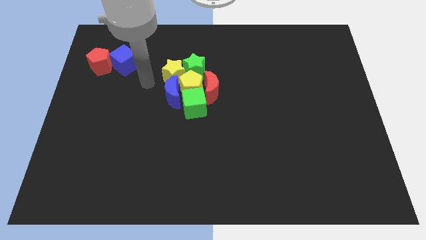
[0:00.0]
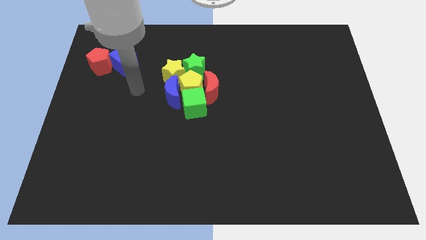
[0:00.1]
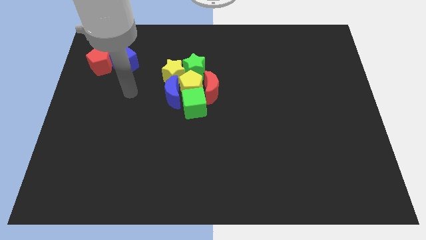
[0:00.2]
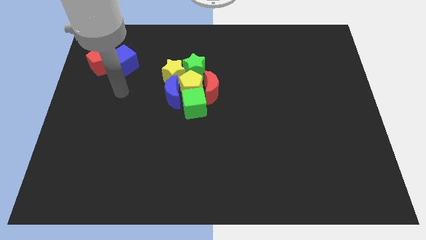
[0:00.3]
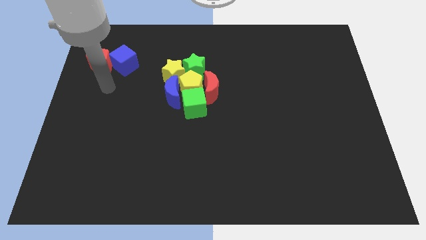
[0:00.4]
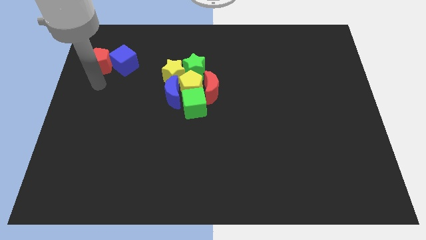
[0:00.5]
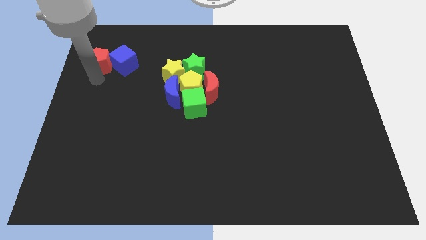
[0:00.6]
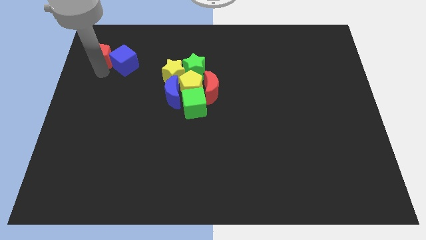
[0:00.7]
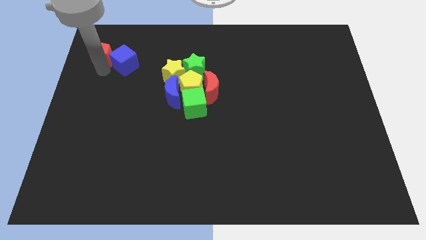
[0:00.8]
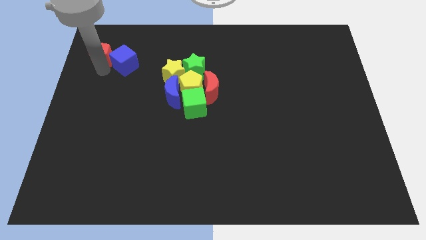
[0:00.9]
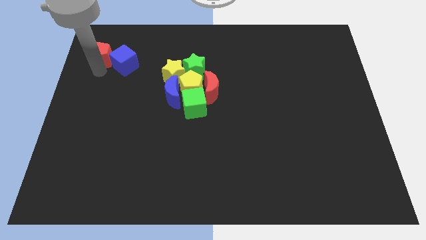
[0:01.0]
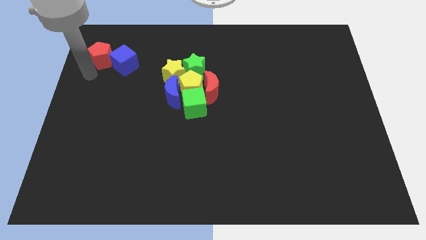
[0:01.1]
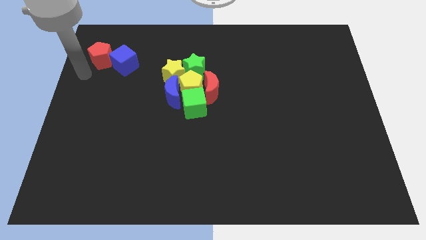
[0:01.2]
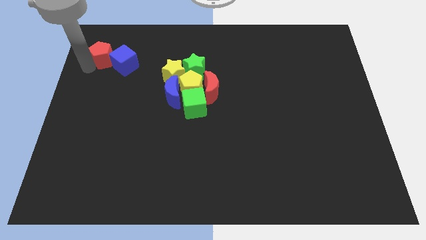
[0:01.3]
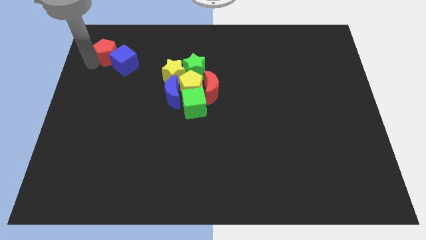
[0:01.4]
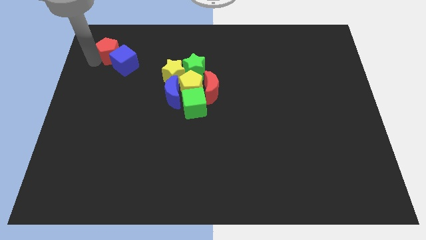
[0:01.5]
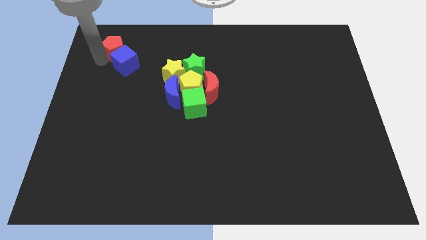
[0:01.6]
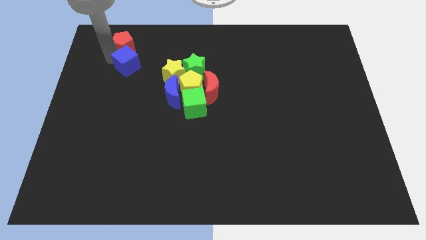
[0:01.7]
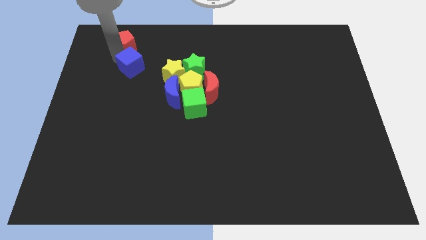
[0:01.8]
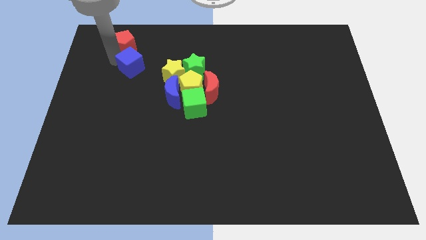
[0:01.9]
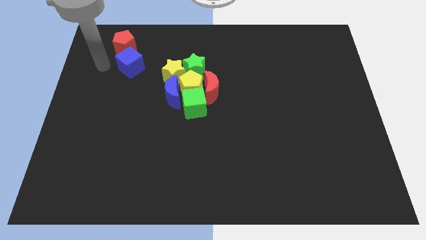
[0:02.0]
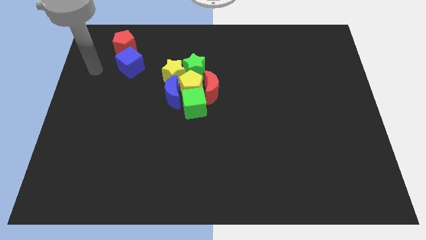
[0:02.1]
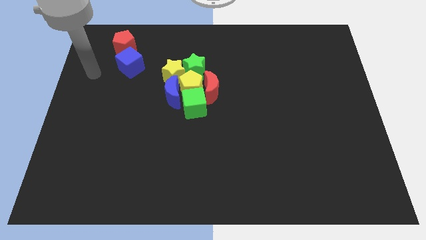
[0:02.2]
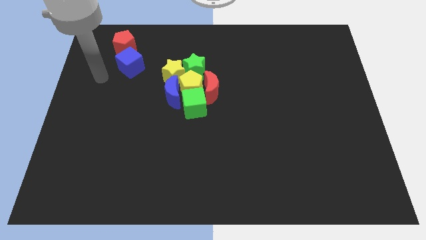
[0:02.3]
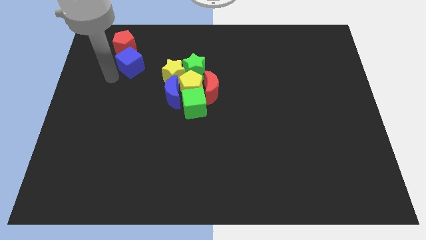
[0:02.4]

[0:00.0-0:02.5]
place the red pentagon above the blue cube

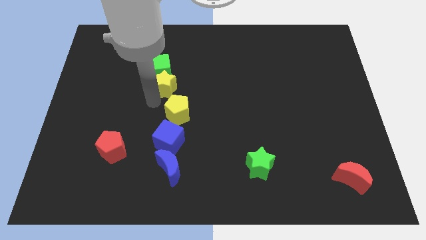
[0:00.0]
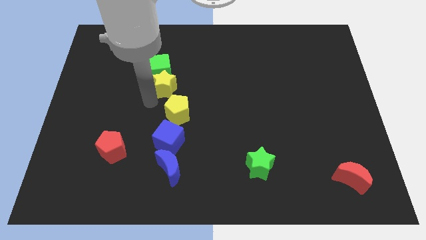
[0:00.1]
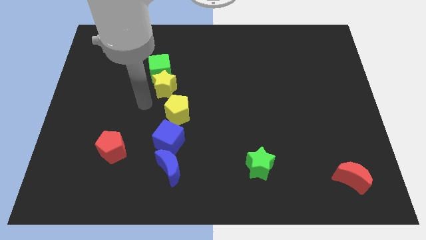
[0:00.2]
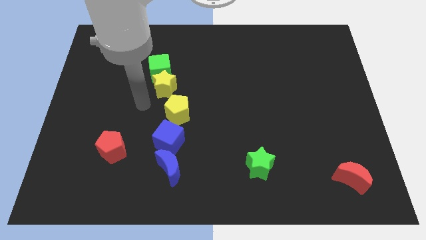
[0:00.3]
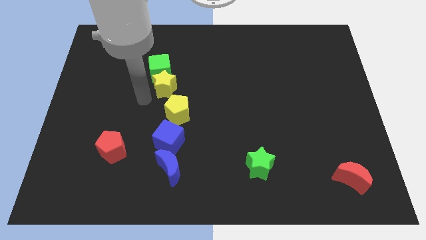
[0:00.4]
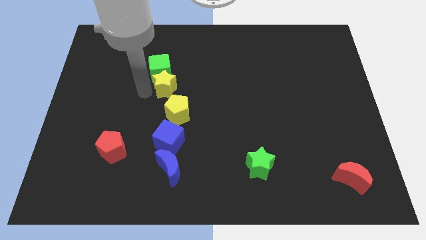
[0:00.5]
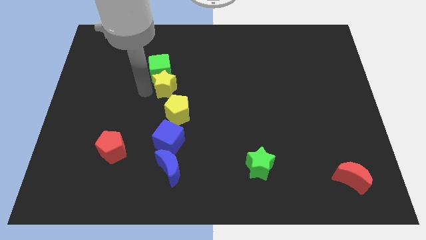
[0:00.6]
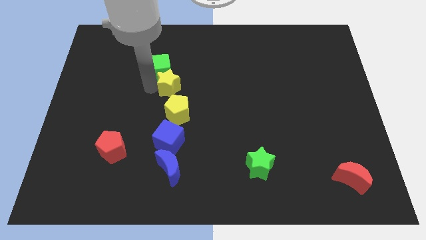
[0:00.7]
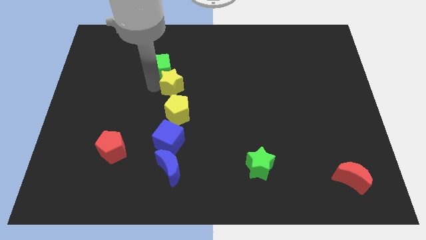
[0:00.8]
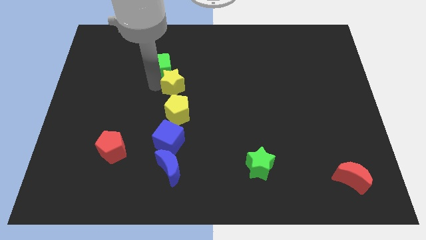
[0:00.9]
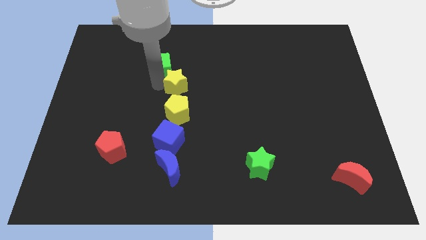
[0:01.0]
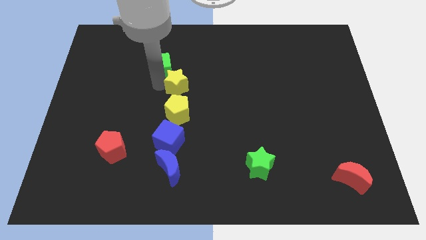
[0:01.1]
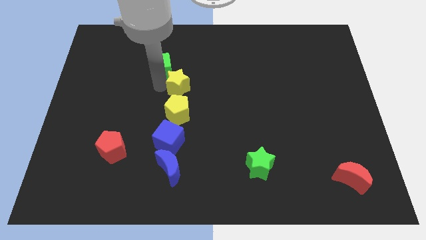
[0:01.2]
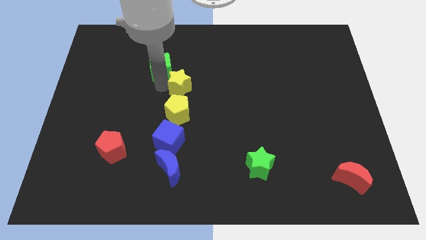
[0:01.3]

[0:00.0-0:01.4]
move yellow star above yellow pentagon

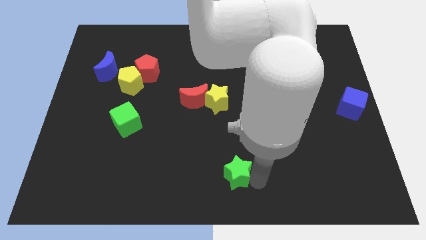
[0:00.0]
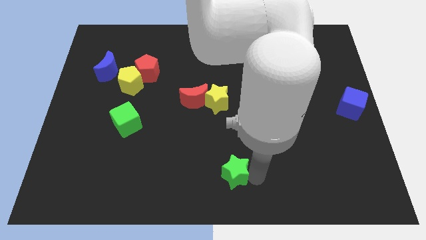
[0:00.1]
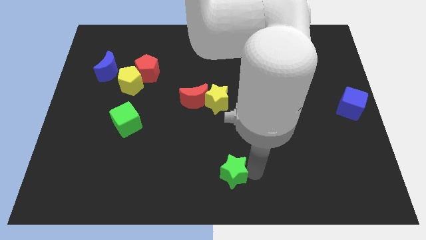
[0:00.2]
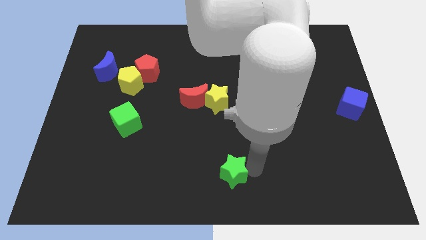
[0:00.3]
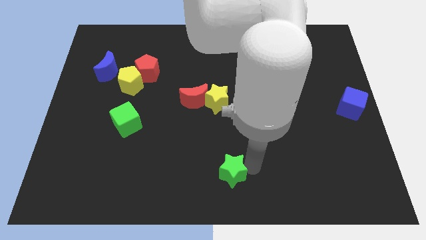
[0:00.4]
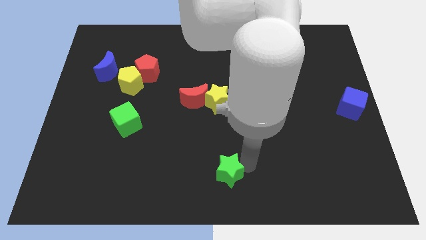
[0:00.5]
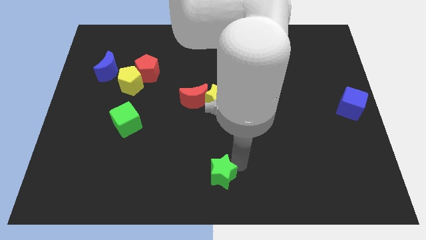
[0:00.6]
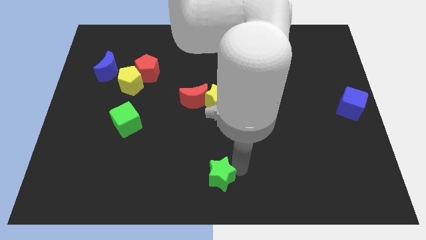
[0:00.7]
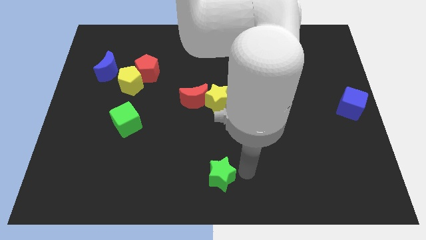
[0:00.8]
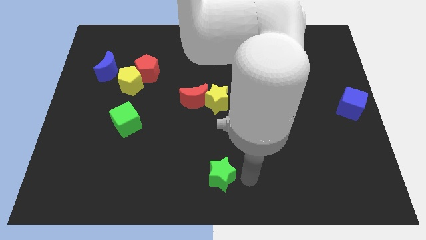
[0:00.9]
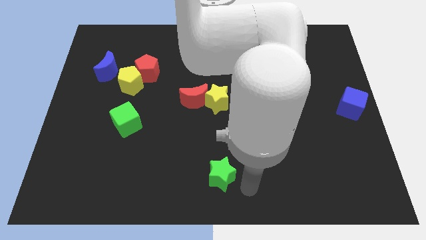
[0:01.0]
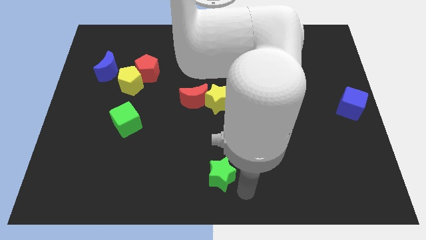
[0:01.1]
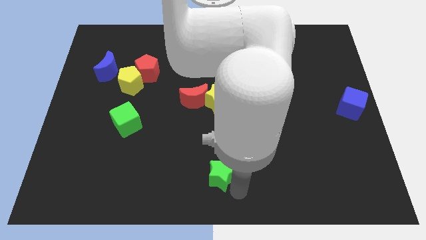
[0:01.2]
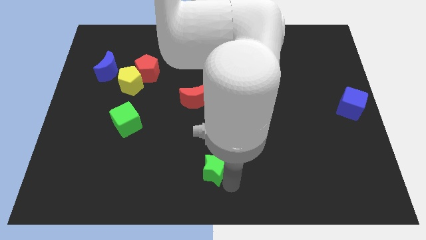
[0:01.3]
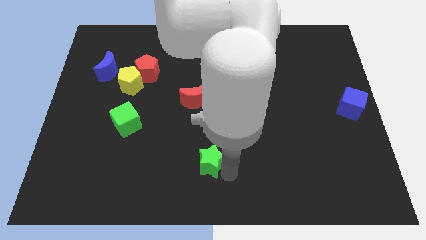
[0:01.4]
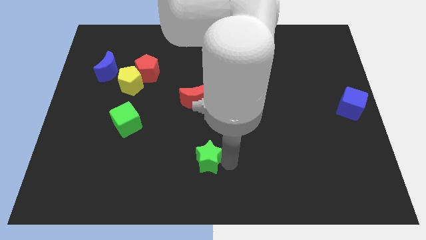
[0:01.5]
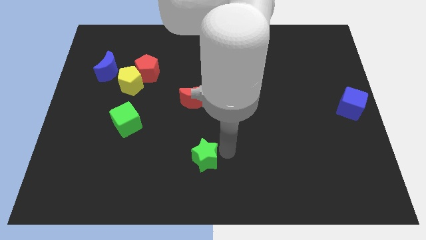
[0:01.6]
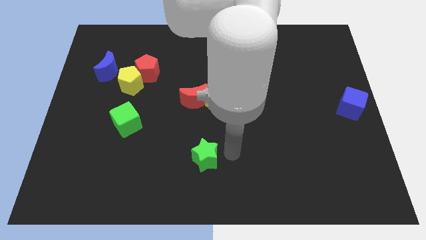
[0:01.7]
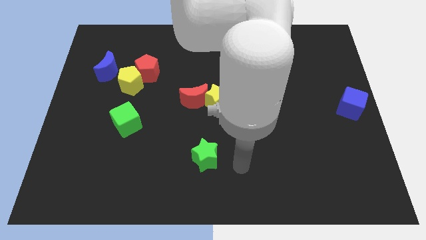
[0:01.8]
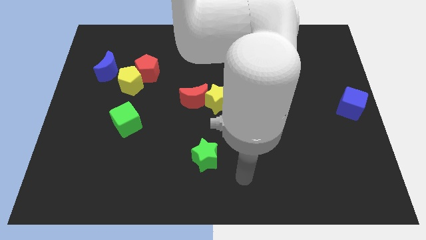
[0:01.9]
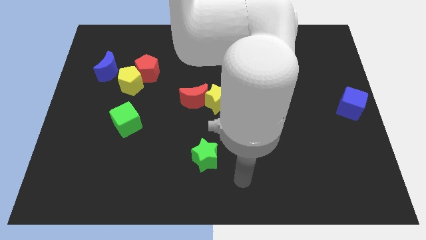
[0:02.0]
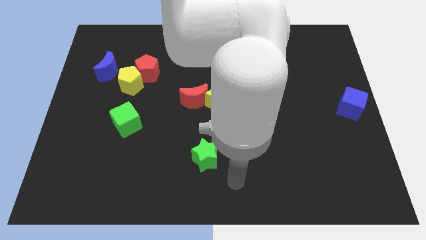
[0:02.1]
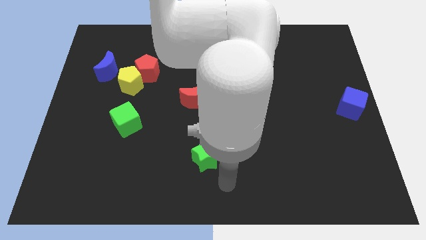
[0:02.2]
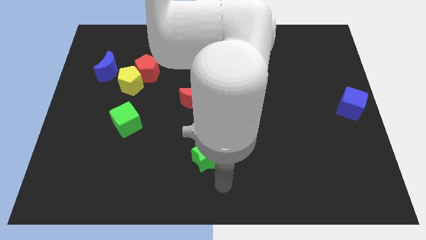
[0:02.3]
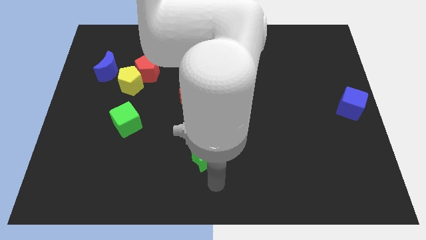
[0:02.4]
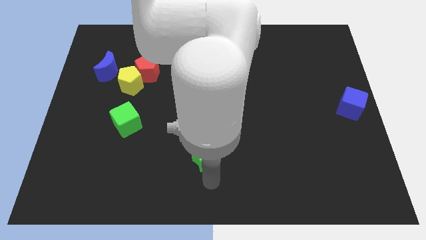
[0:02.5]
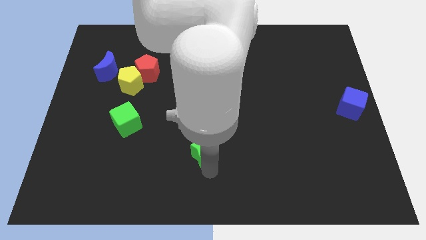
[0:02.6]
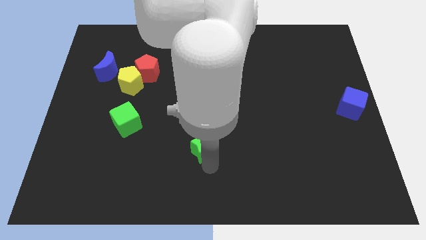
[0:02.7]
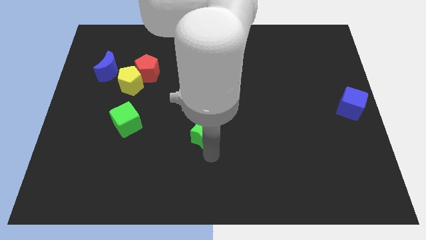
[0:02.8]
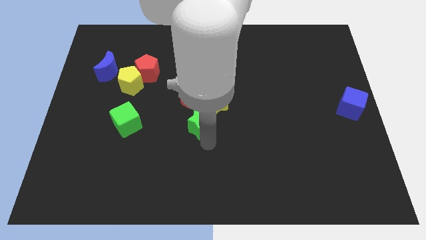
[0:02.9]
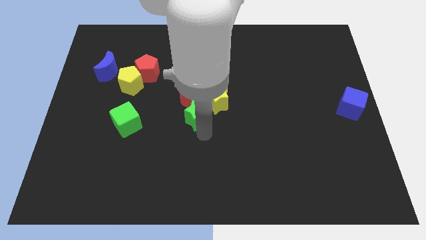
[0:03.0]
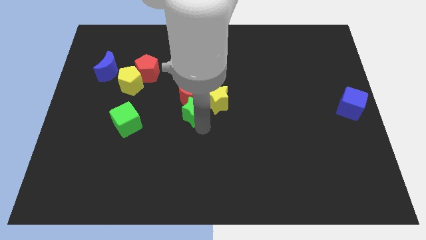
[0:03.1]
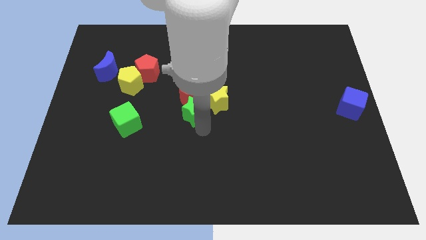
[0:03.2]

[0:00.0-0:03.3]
push green star into red moon and yellow star

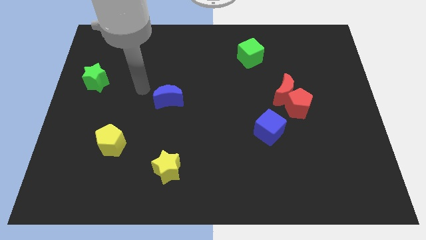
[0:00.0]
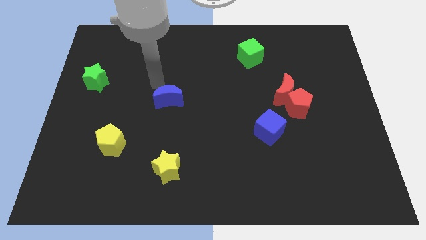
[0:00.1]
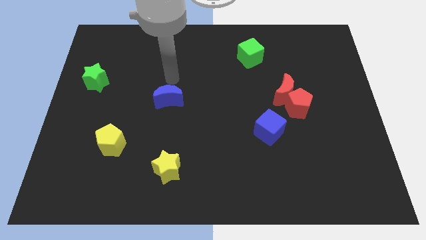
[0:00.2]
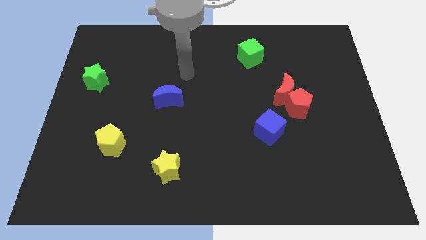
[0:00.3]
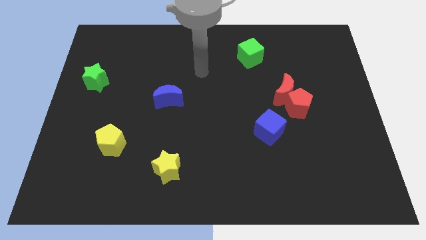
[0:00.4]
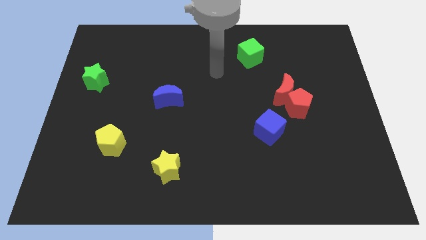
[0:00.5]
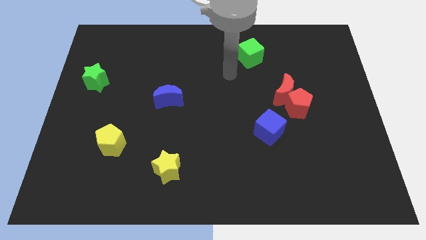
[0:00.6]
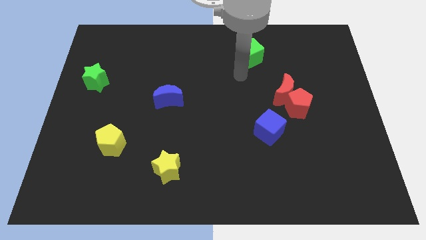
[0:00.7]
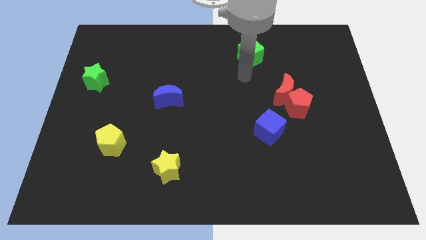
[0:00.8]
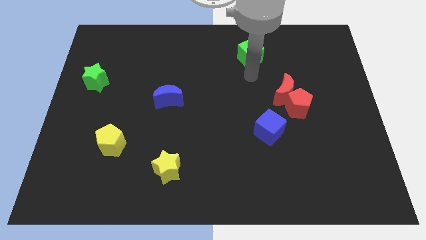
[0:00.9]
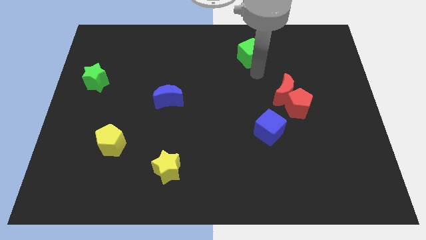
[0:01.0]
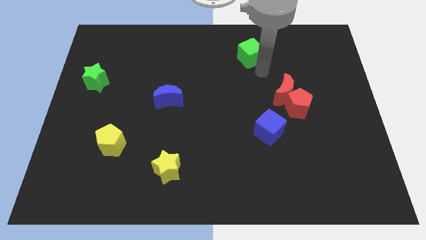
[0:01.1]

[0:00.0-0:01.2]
point the arm in between the green cube and the red moon

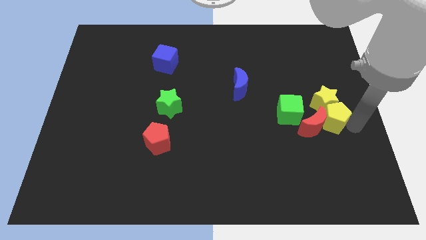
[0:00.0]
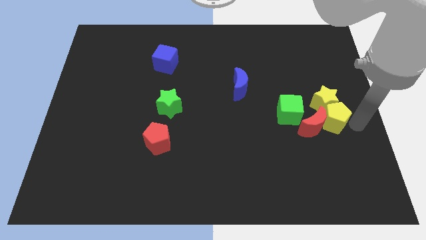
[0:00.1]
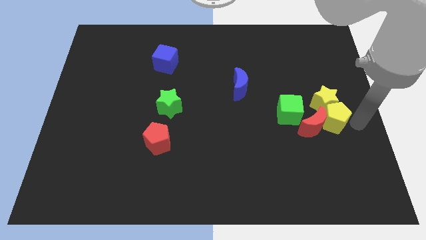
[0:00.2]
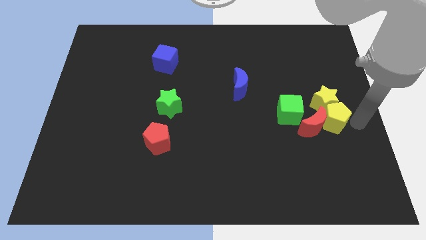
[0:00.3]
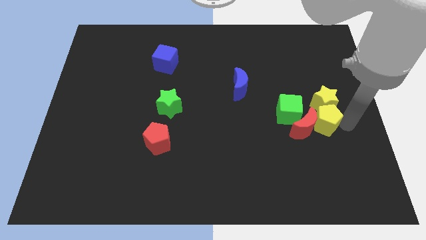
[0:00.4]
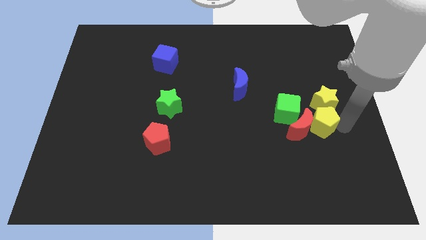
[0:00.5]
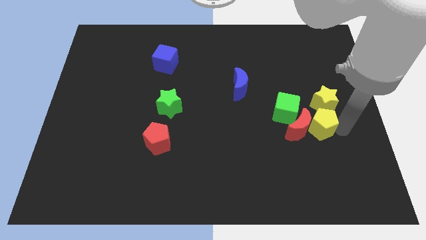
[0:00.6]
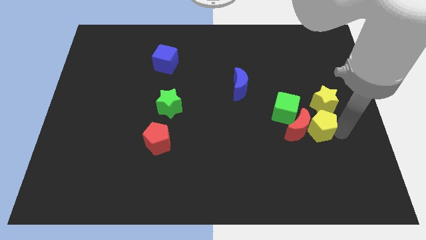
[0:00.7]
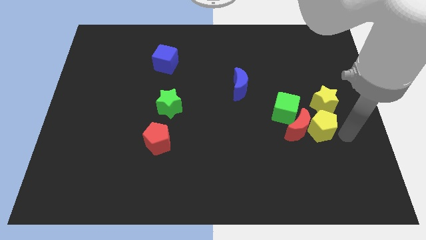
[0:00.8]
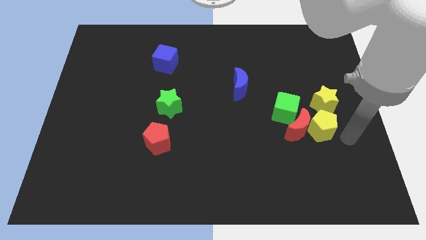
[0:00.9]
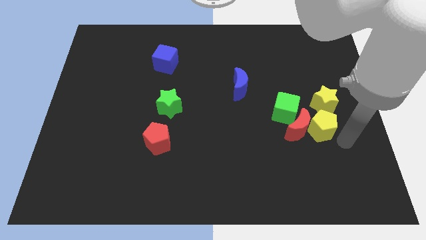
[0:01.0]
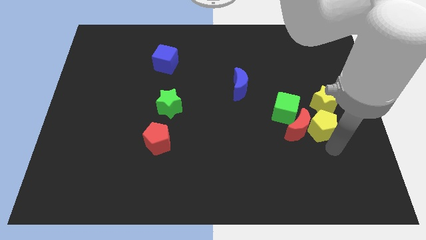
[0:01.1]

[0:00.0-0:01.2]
push the yellow pentagon into the red crescent
